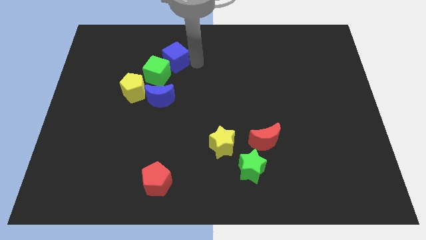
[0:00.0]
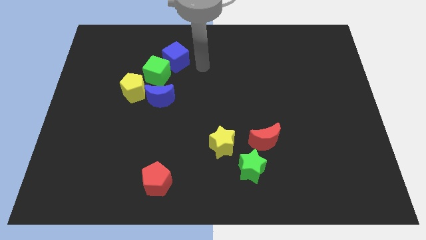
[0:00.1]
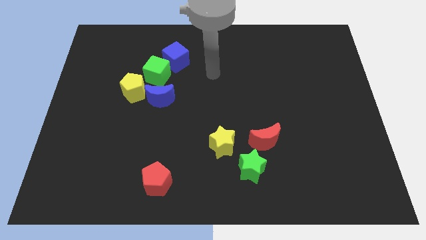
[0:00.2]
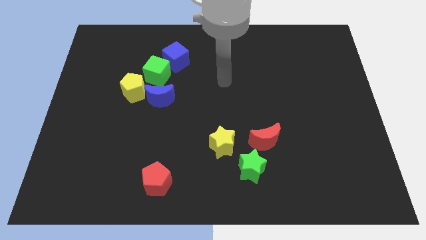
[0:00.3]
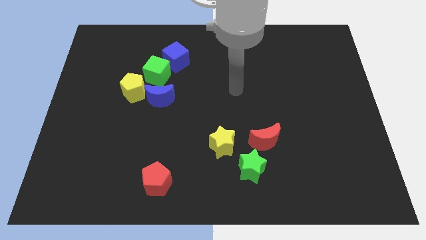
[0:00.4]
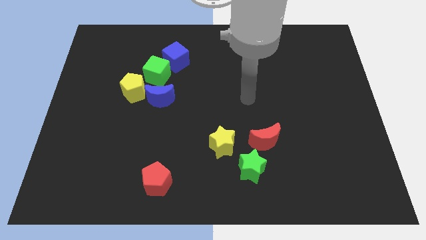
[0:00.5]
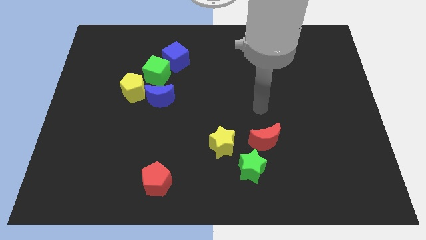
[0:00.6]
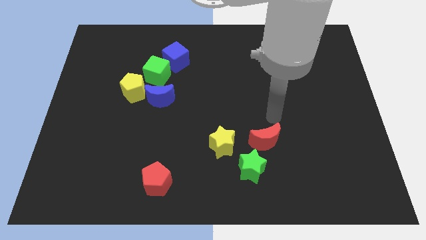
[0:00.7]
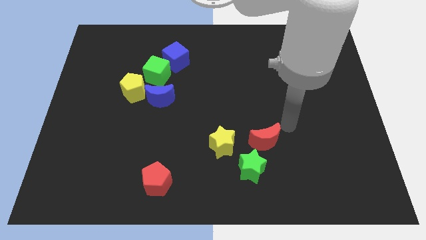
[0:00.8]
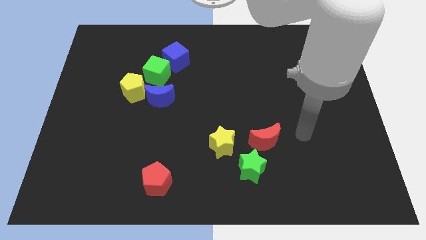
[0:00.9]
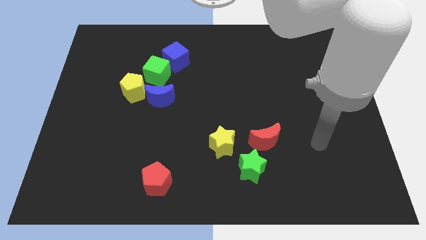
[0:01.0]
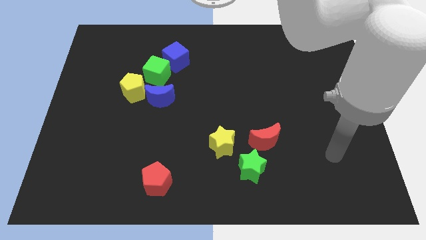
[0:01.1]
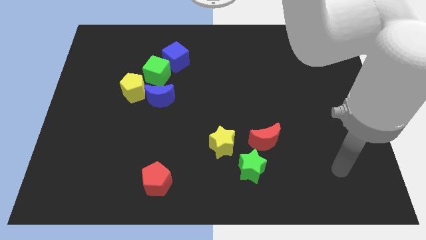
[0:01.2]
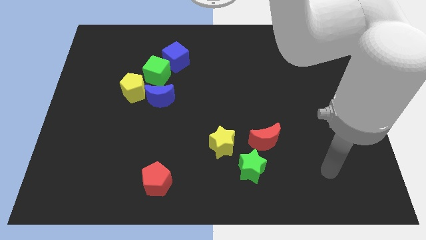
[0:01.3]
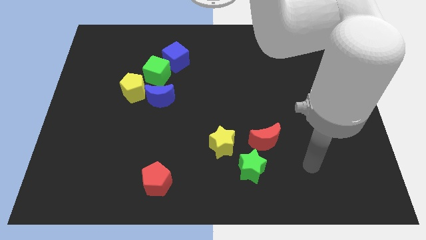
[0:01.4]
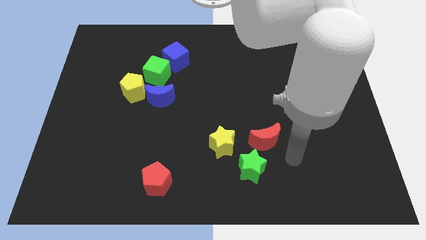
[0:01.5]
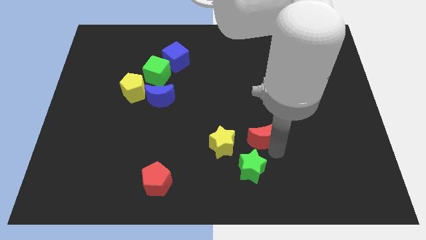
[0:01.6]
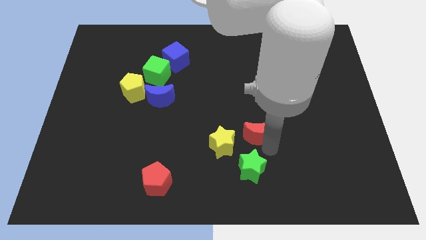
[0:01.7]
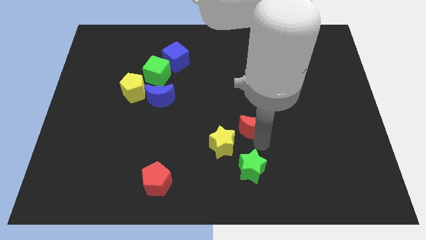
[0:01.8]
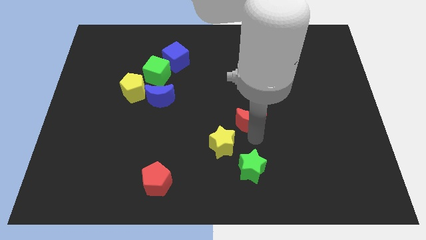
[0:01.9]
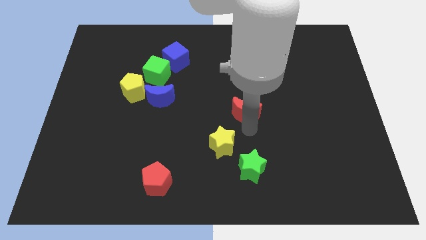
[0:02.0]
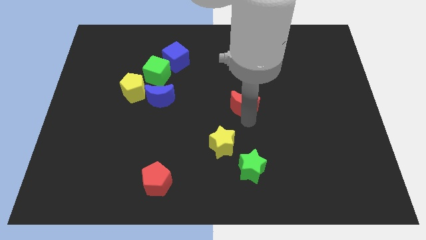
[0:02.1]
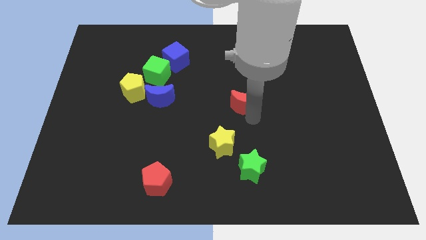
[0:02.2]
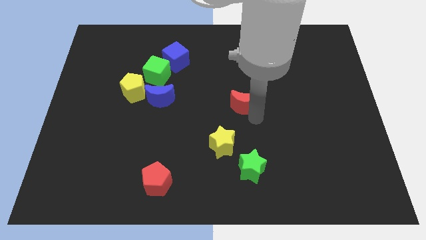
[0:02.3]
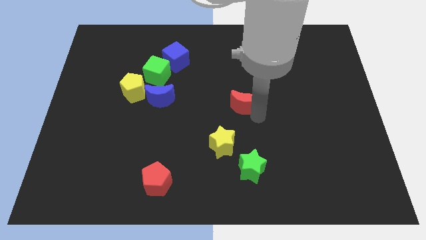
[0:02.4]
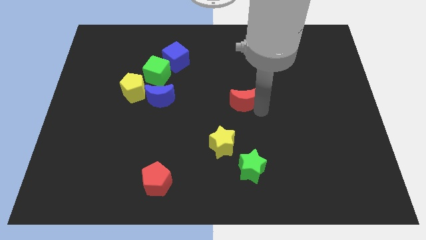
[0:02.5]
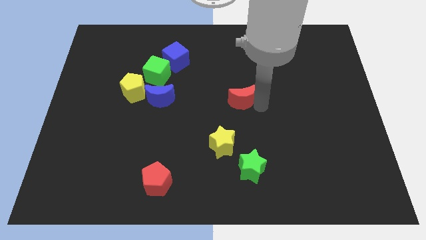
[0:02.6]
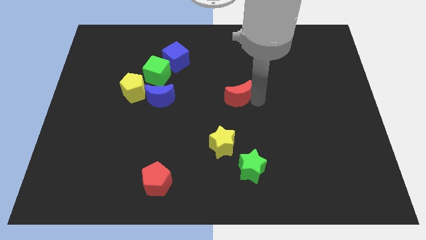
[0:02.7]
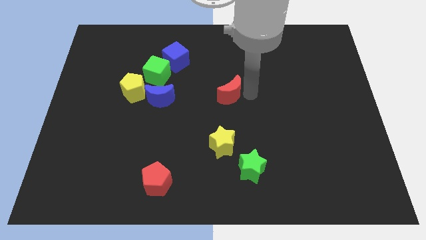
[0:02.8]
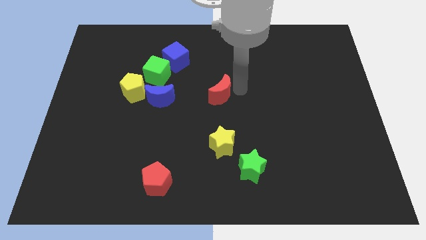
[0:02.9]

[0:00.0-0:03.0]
place red moon parallel to the yellow star

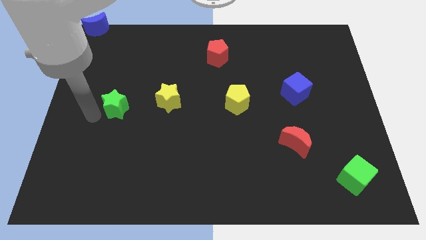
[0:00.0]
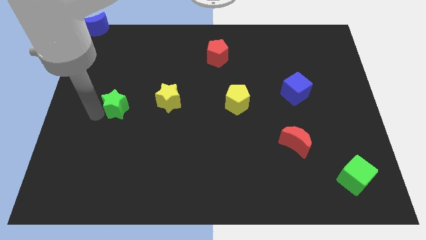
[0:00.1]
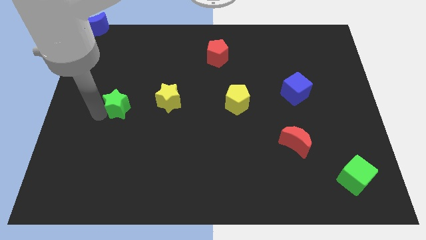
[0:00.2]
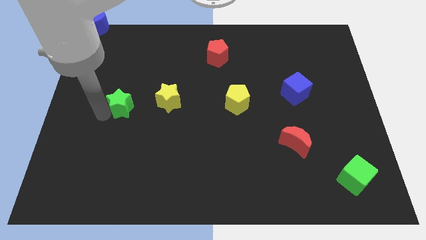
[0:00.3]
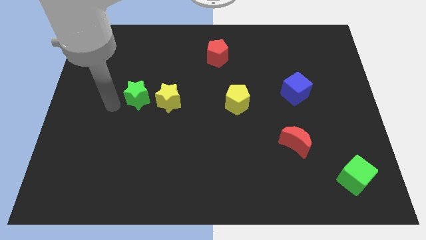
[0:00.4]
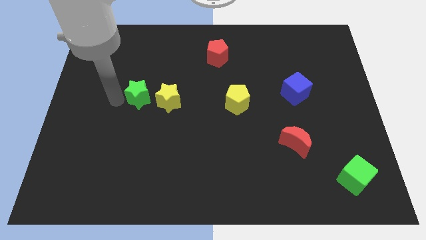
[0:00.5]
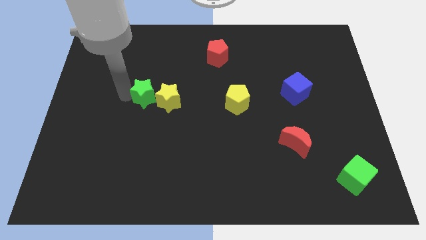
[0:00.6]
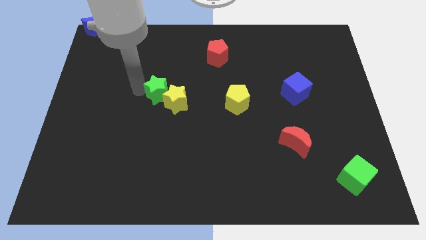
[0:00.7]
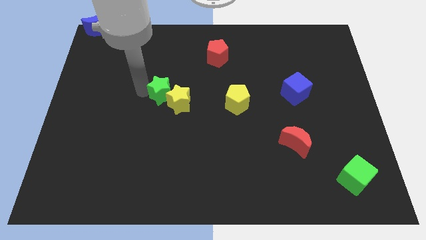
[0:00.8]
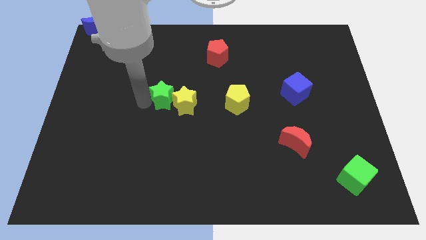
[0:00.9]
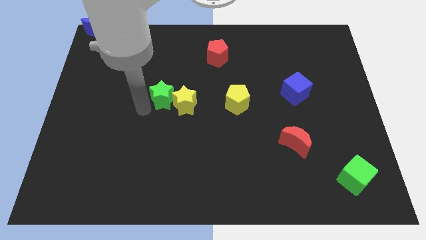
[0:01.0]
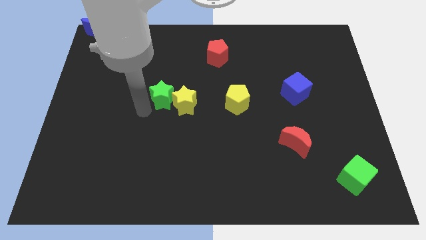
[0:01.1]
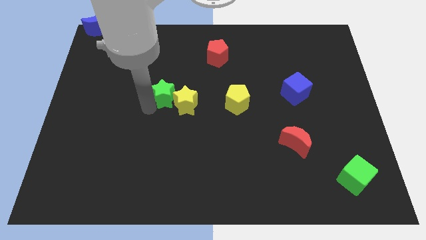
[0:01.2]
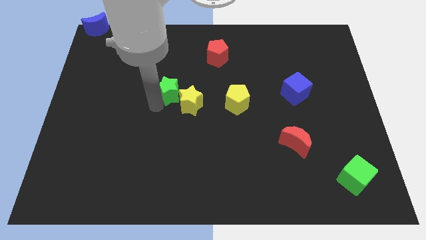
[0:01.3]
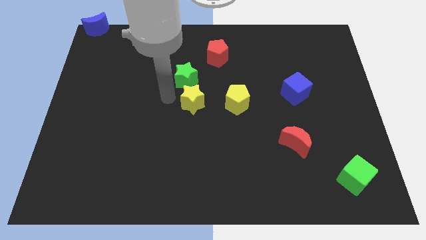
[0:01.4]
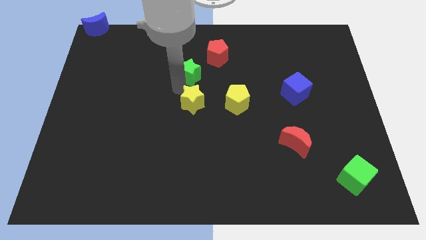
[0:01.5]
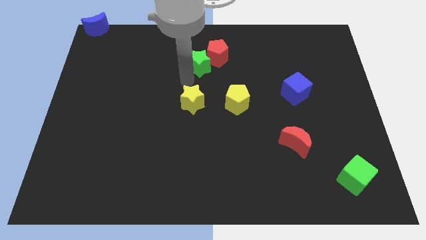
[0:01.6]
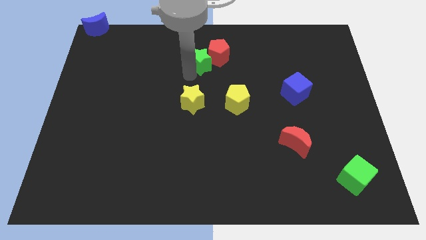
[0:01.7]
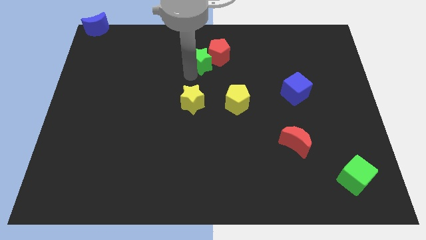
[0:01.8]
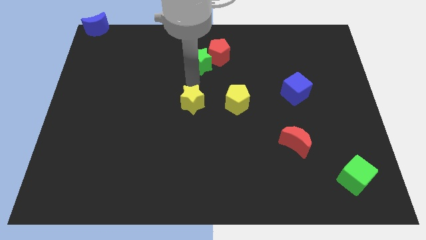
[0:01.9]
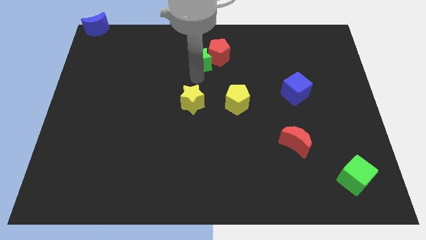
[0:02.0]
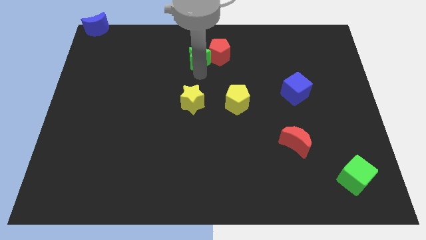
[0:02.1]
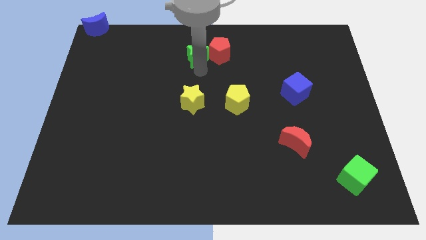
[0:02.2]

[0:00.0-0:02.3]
put the green star diagonal into red pentagon

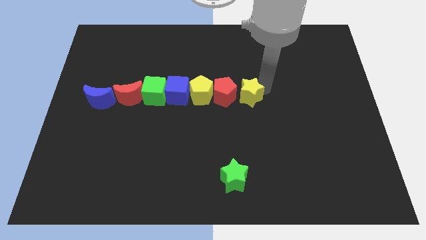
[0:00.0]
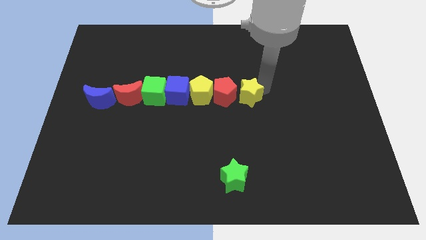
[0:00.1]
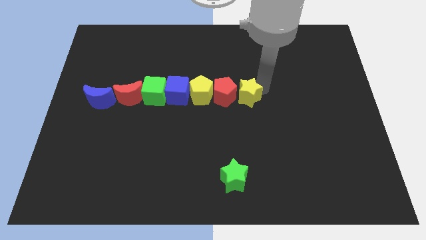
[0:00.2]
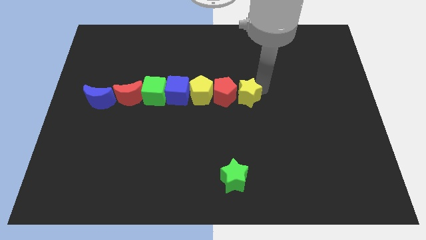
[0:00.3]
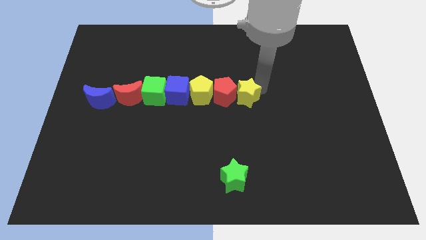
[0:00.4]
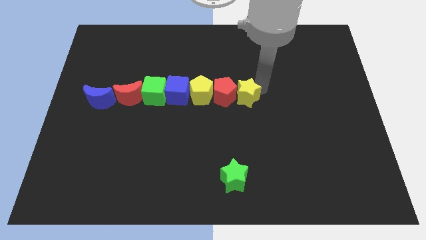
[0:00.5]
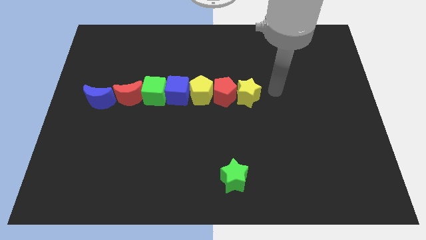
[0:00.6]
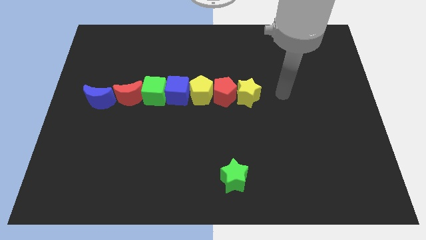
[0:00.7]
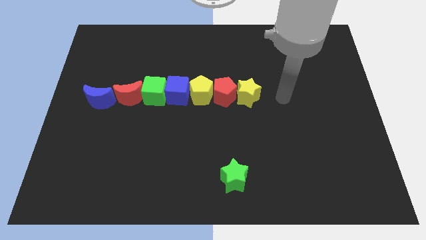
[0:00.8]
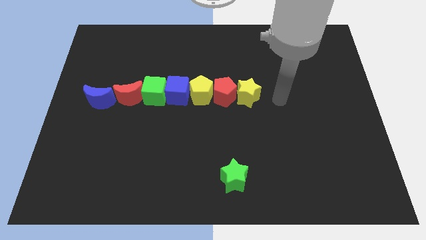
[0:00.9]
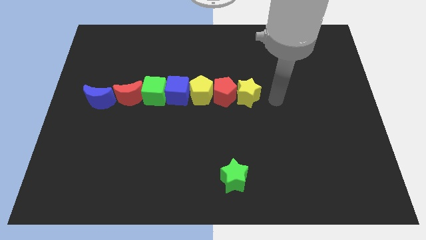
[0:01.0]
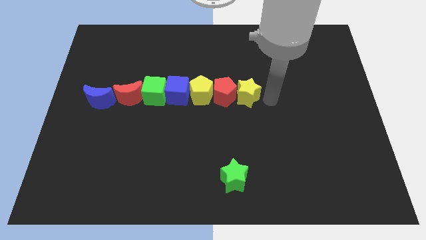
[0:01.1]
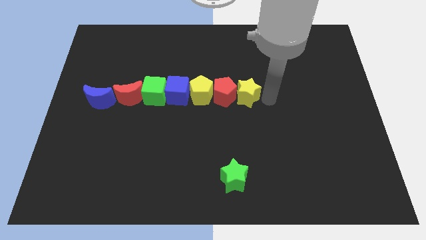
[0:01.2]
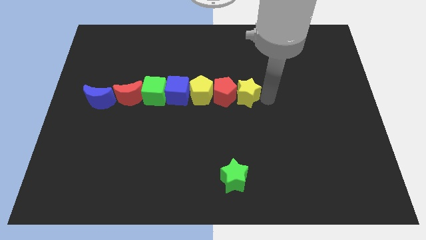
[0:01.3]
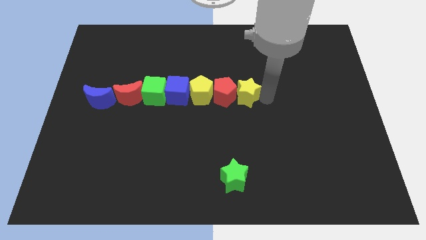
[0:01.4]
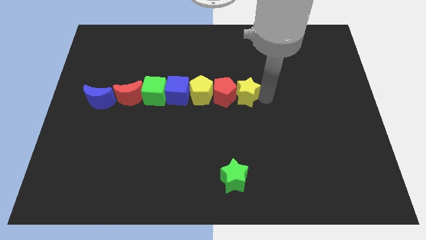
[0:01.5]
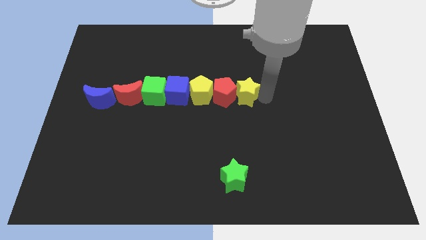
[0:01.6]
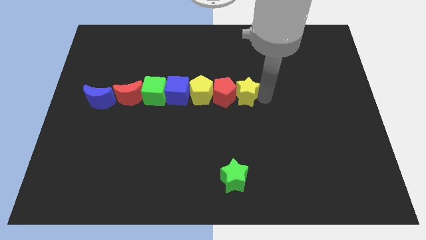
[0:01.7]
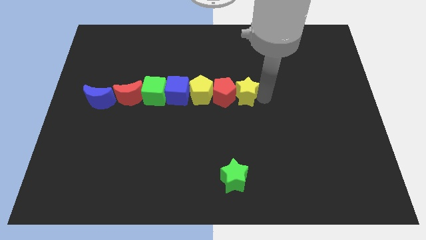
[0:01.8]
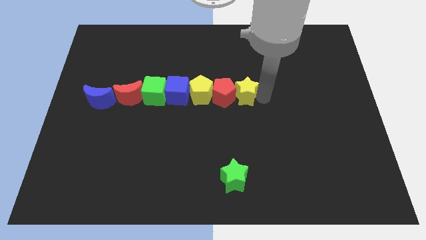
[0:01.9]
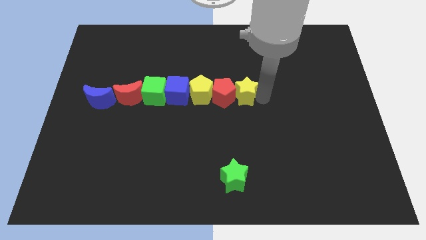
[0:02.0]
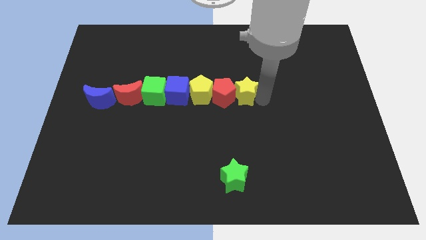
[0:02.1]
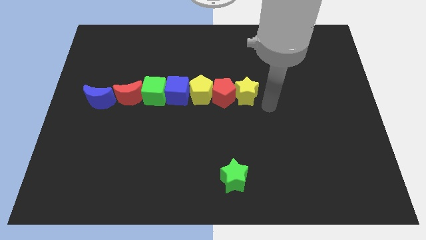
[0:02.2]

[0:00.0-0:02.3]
push the yellow star into the red pentagon

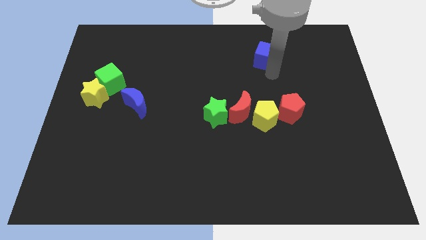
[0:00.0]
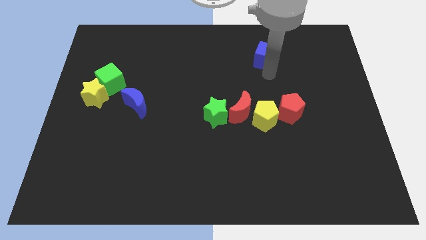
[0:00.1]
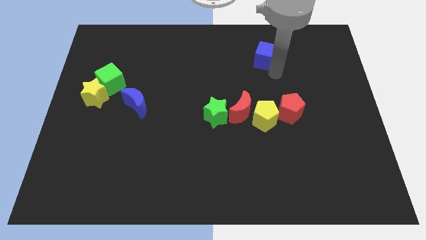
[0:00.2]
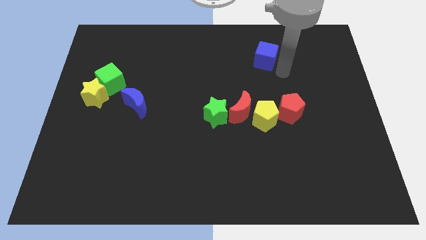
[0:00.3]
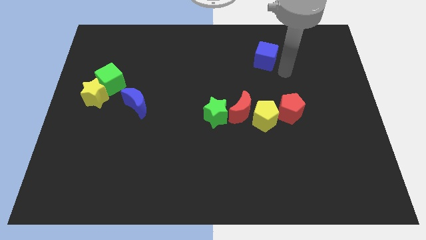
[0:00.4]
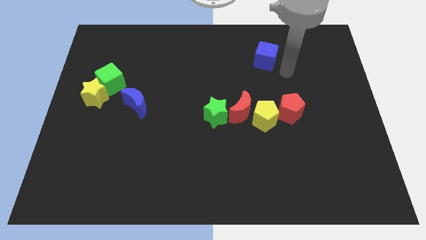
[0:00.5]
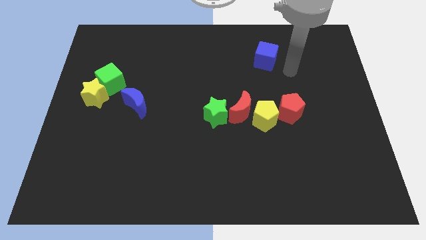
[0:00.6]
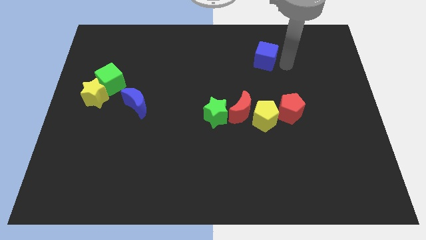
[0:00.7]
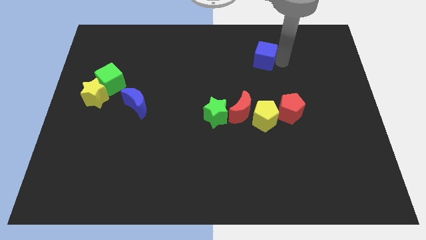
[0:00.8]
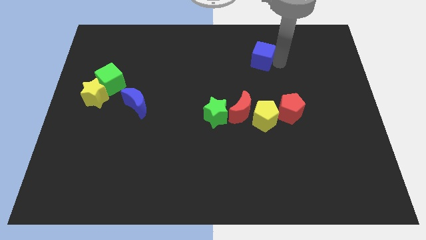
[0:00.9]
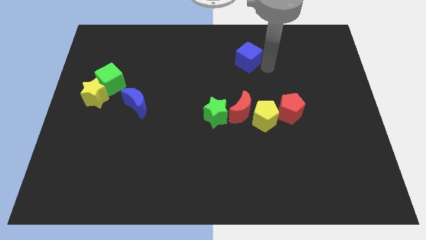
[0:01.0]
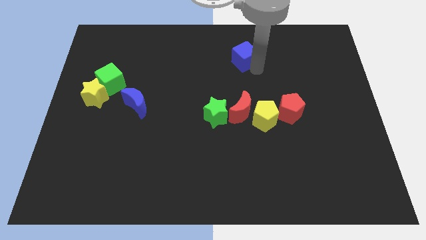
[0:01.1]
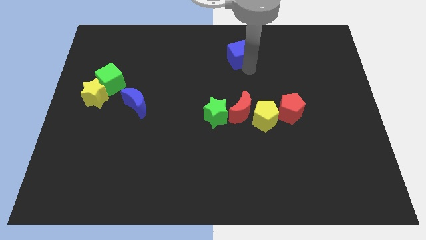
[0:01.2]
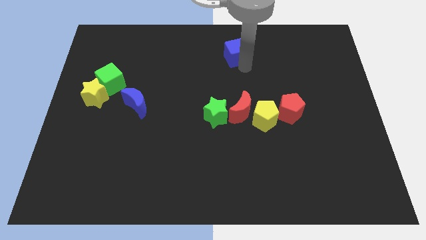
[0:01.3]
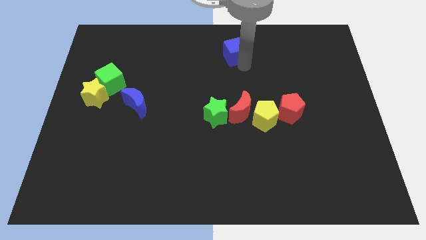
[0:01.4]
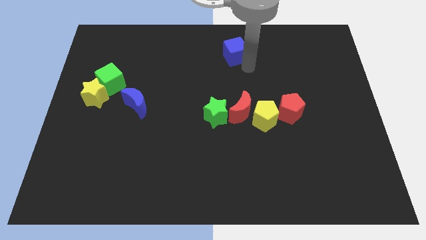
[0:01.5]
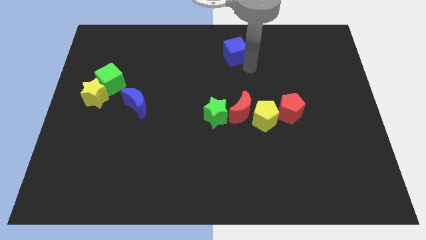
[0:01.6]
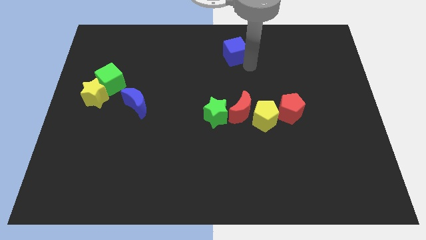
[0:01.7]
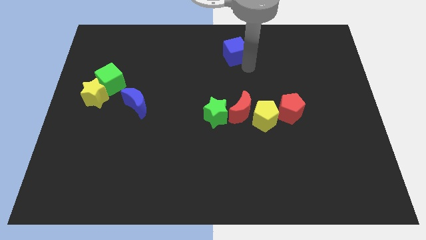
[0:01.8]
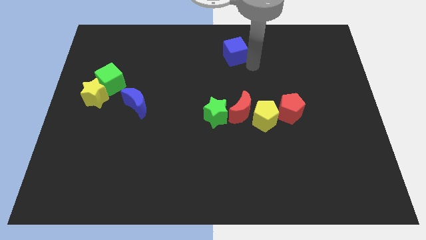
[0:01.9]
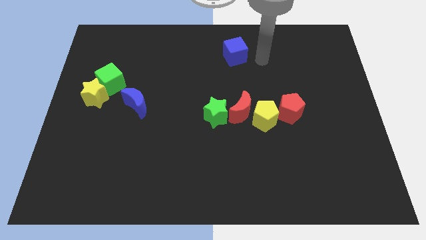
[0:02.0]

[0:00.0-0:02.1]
move the blue crescent towards the green star
